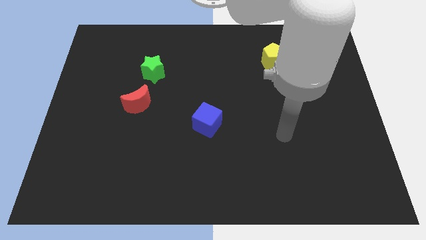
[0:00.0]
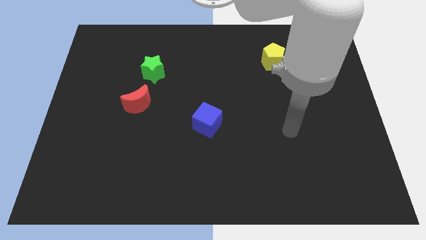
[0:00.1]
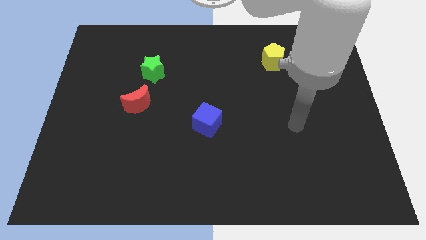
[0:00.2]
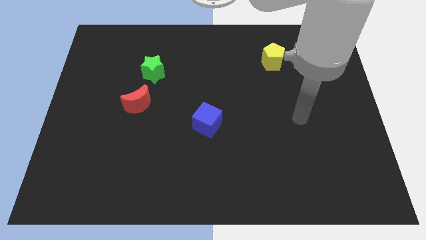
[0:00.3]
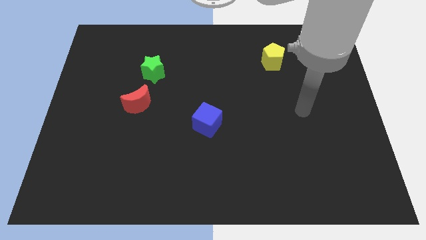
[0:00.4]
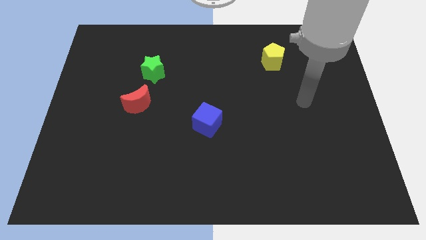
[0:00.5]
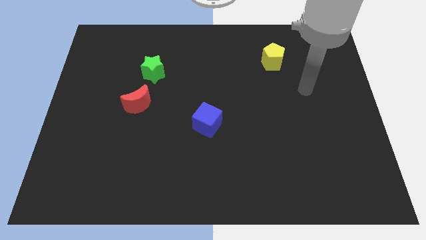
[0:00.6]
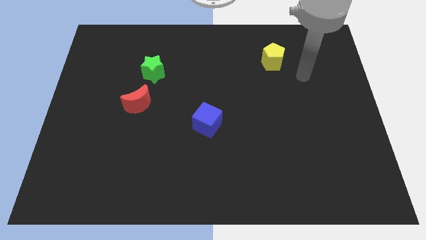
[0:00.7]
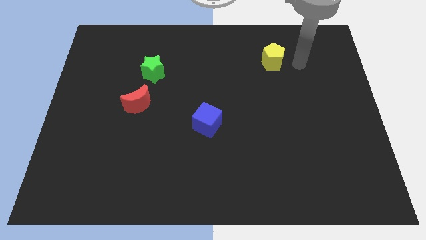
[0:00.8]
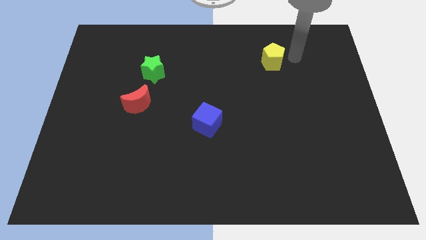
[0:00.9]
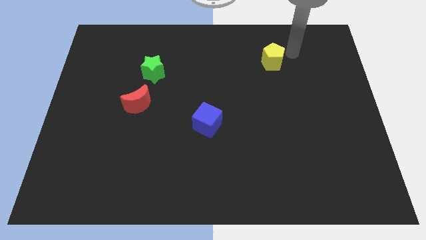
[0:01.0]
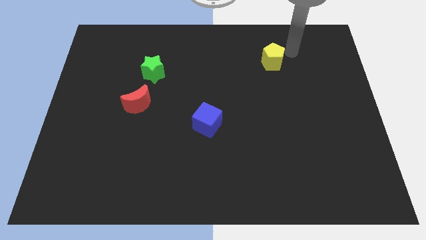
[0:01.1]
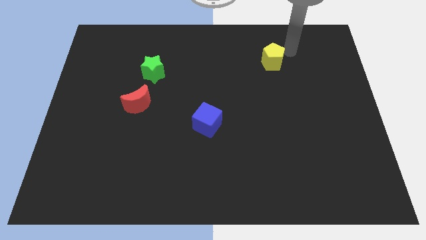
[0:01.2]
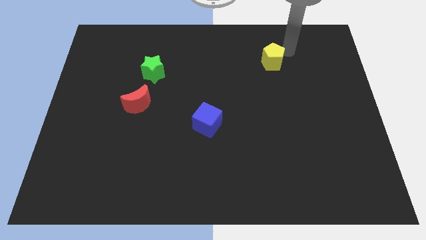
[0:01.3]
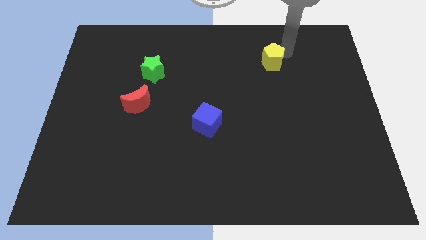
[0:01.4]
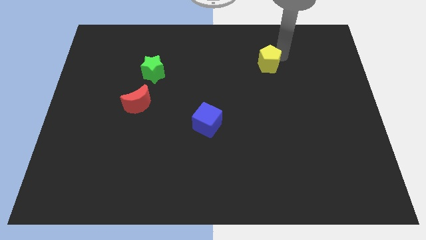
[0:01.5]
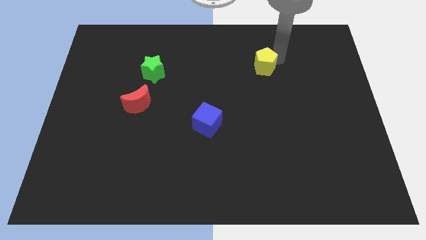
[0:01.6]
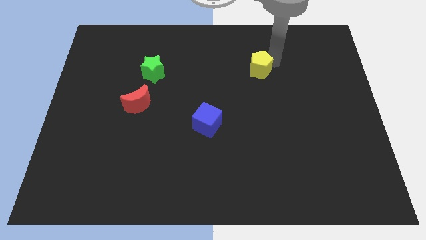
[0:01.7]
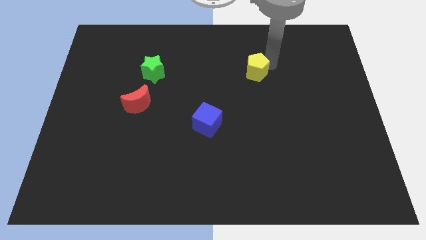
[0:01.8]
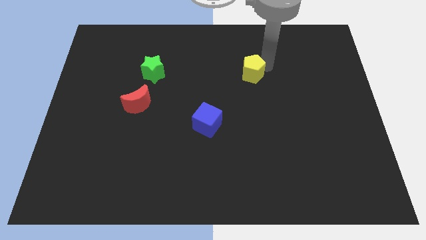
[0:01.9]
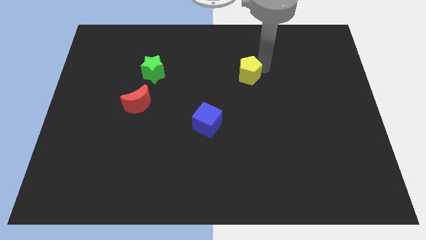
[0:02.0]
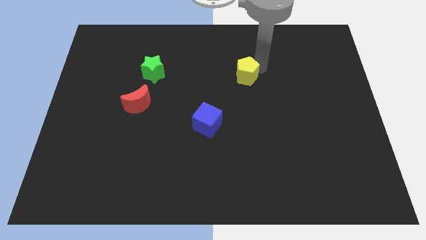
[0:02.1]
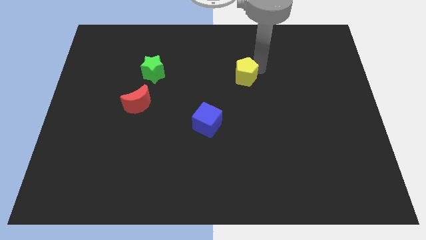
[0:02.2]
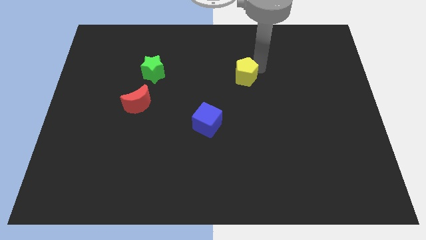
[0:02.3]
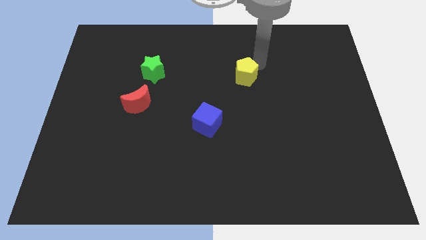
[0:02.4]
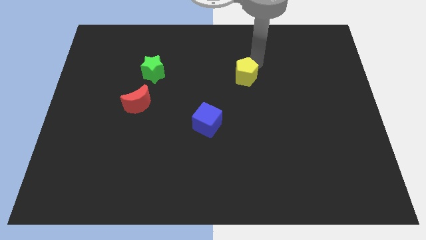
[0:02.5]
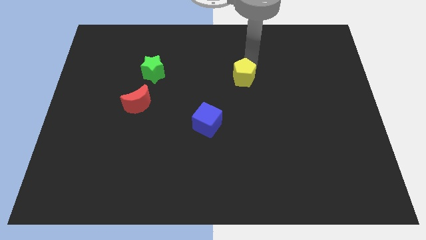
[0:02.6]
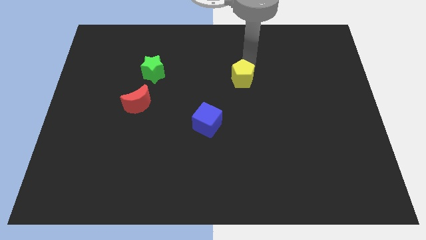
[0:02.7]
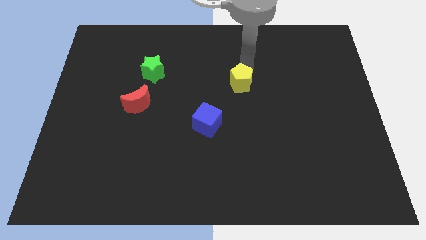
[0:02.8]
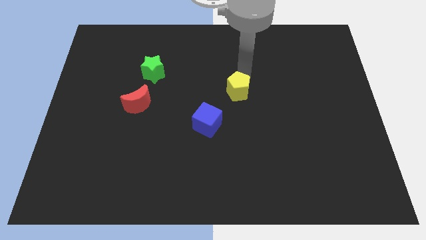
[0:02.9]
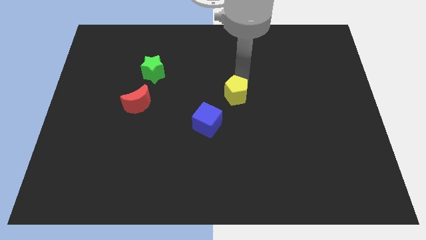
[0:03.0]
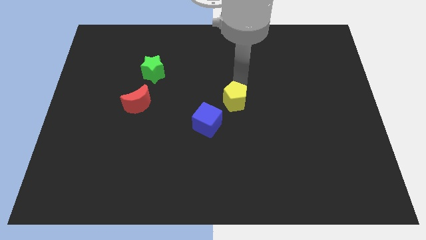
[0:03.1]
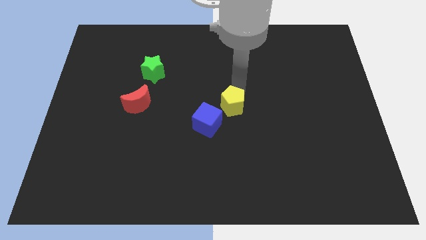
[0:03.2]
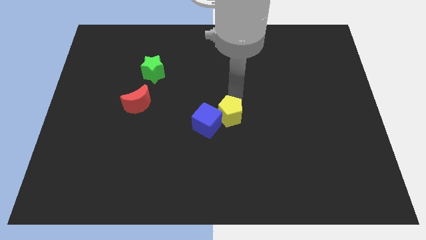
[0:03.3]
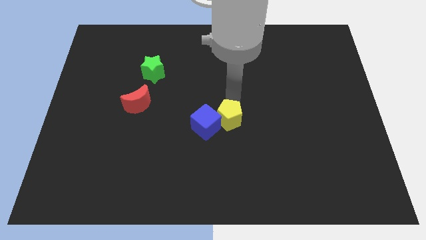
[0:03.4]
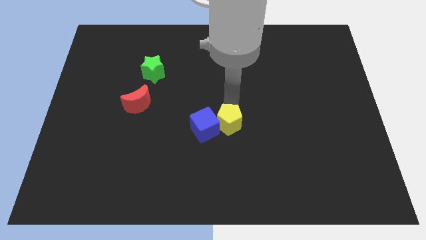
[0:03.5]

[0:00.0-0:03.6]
move the pentagon close to the blue cube

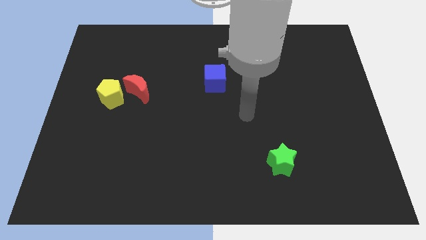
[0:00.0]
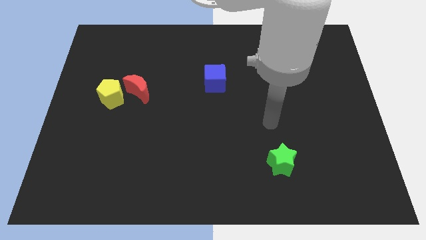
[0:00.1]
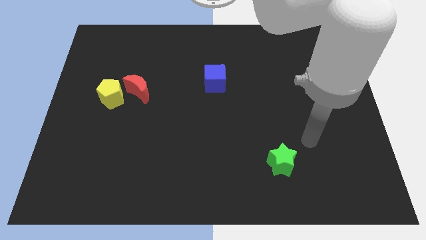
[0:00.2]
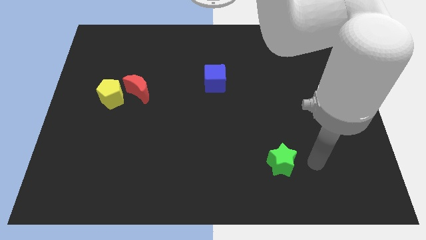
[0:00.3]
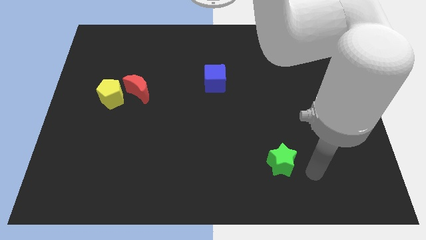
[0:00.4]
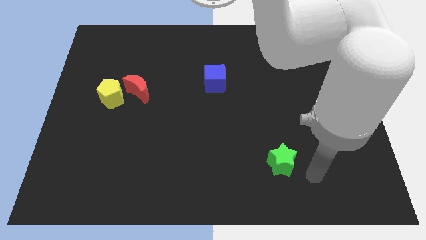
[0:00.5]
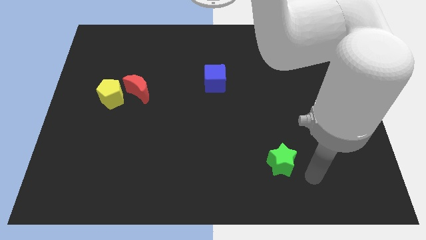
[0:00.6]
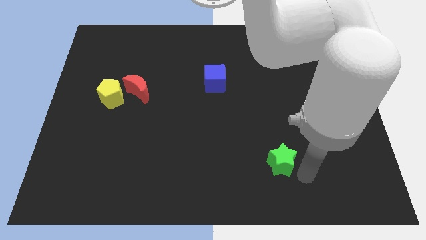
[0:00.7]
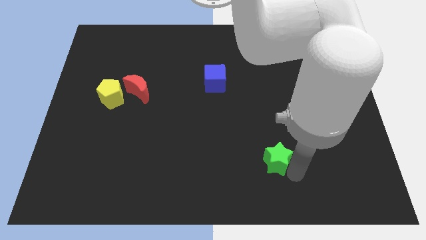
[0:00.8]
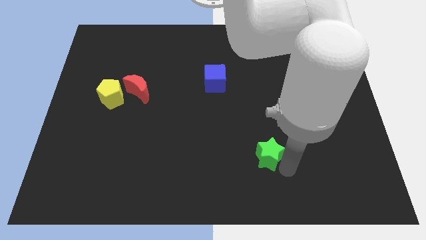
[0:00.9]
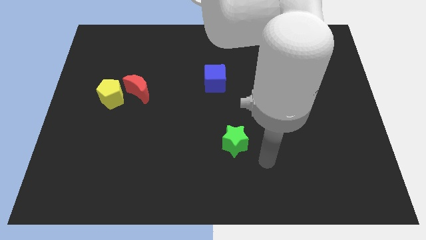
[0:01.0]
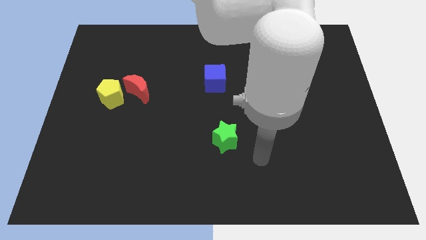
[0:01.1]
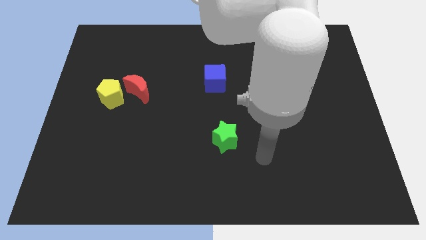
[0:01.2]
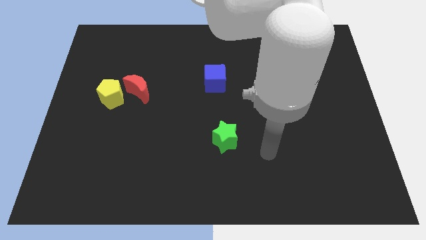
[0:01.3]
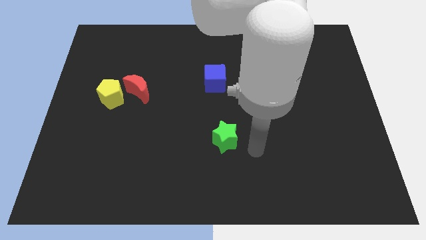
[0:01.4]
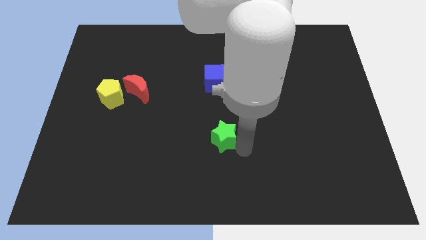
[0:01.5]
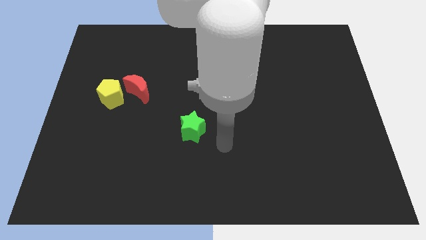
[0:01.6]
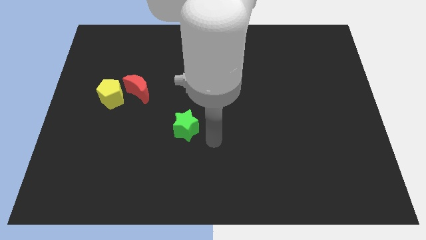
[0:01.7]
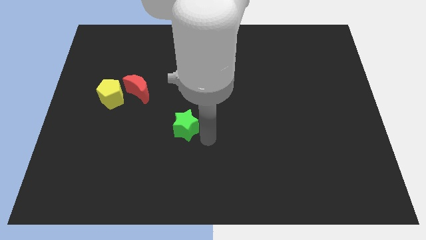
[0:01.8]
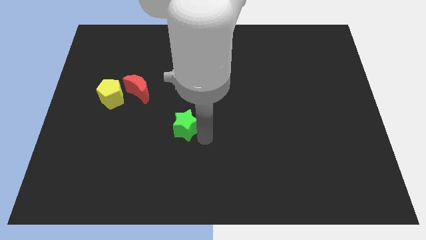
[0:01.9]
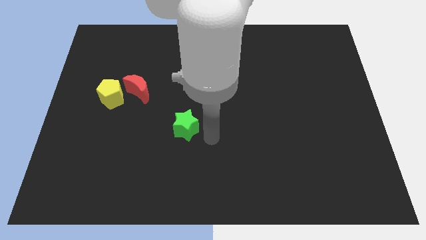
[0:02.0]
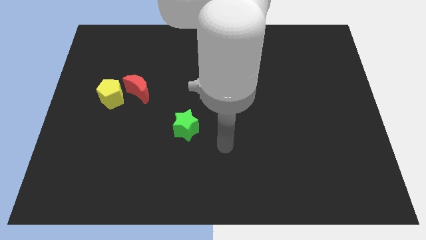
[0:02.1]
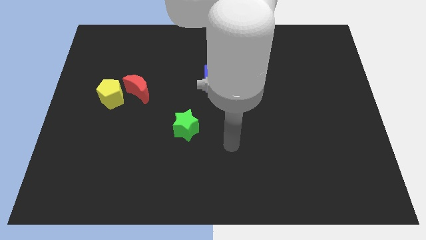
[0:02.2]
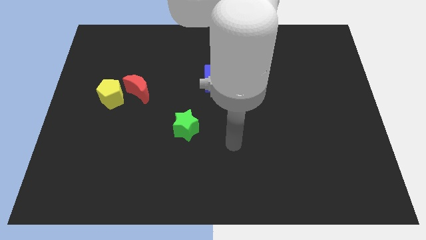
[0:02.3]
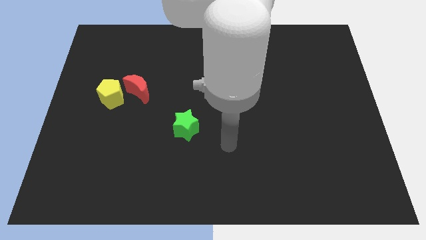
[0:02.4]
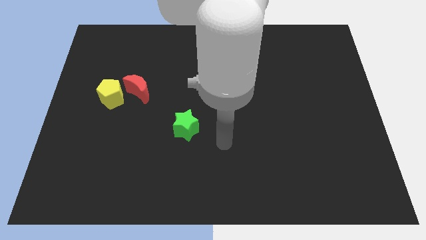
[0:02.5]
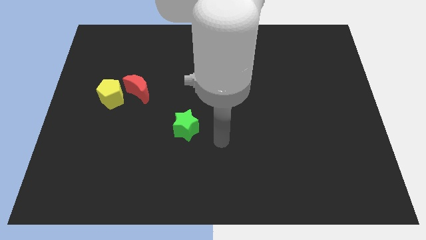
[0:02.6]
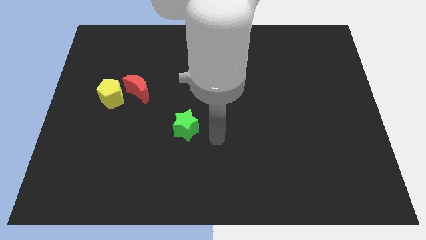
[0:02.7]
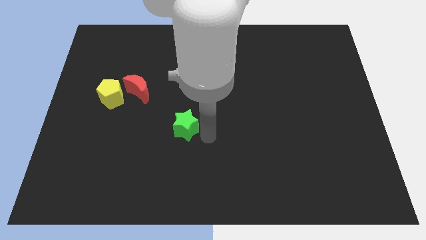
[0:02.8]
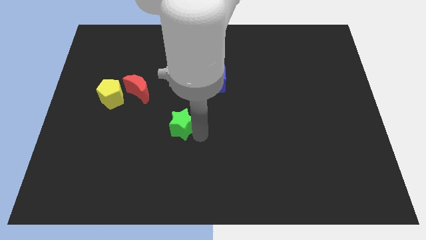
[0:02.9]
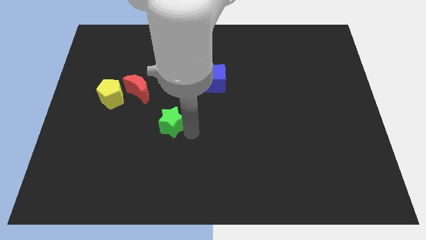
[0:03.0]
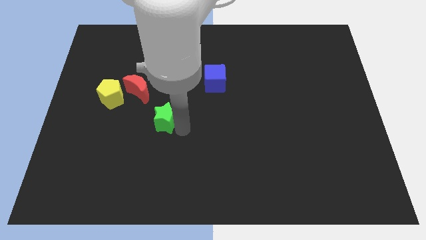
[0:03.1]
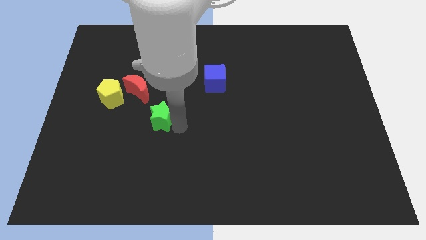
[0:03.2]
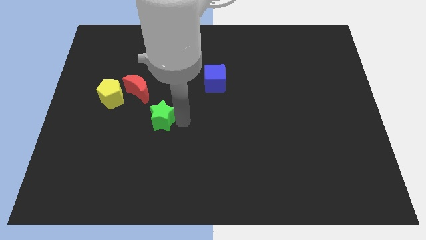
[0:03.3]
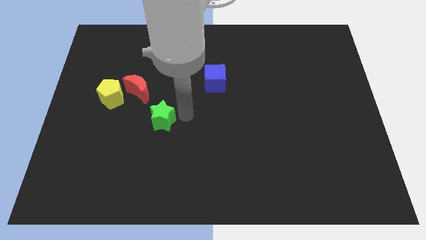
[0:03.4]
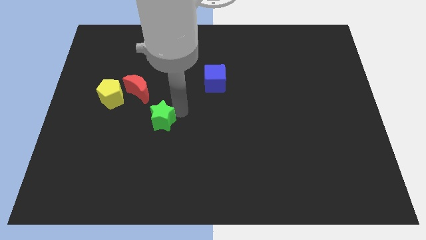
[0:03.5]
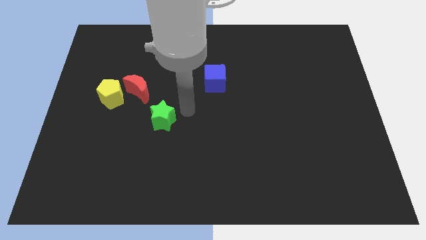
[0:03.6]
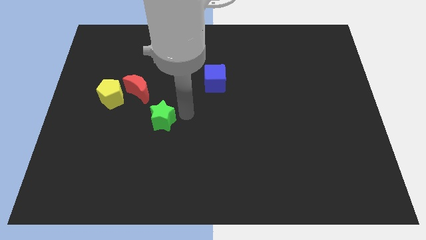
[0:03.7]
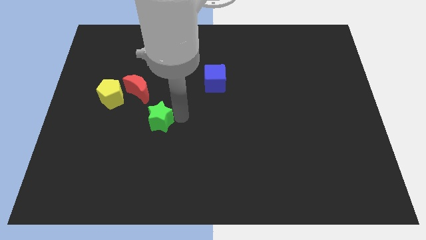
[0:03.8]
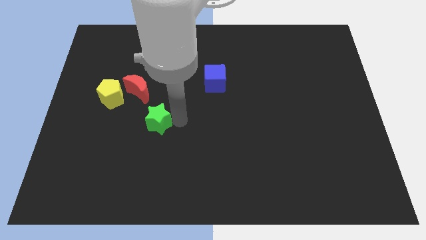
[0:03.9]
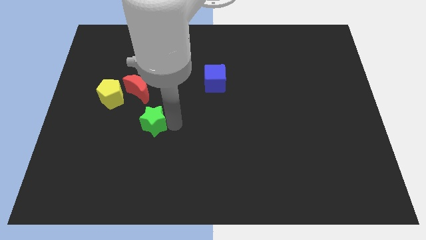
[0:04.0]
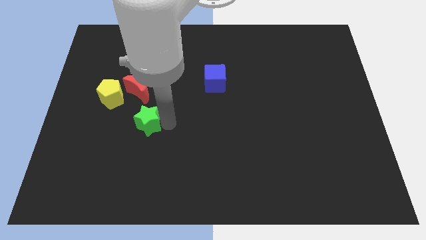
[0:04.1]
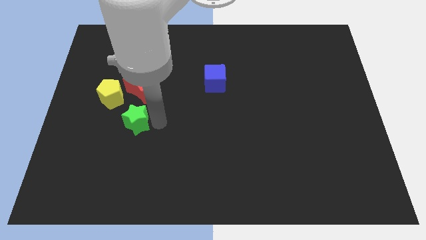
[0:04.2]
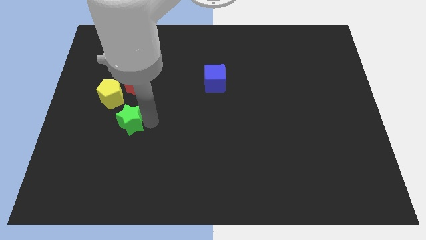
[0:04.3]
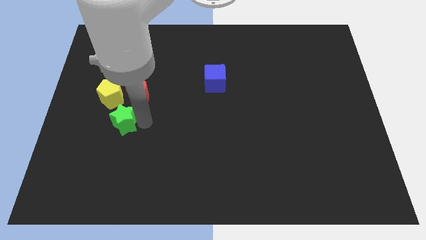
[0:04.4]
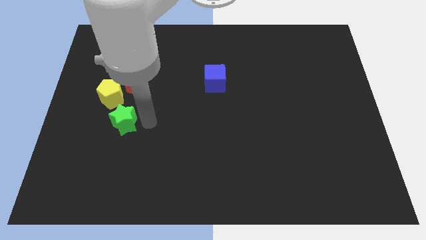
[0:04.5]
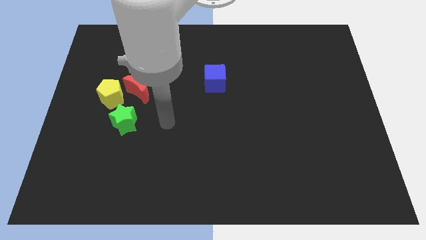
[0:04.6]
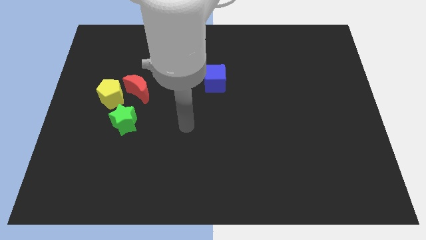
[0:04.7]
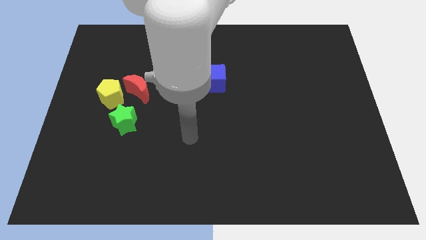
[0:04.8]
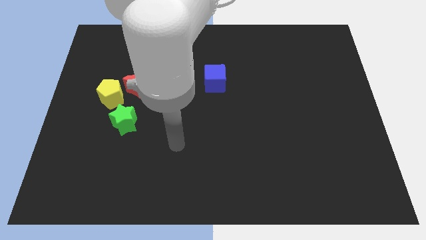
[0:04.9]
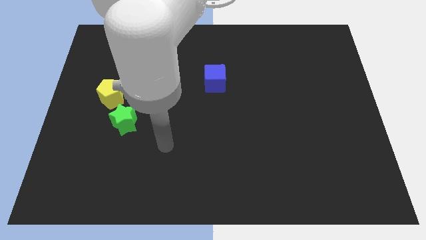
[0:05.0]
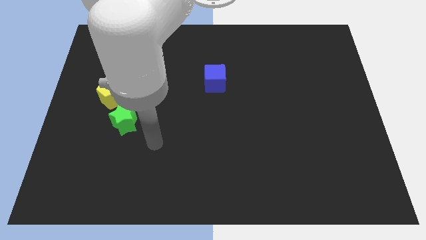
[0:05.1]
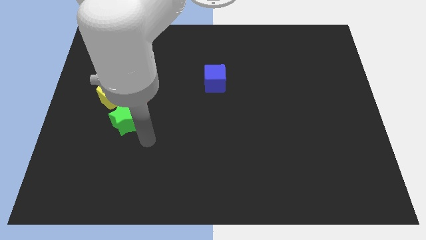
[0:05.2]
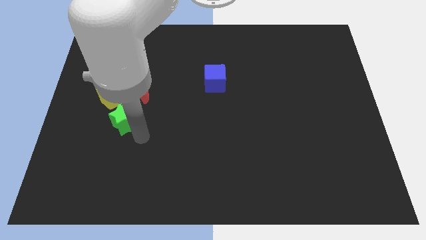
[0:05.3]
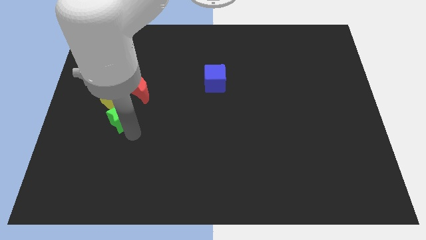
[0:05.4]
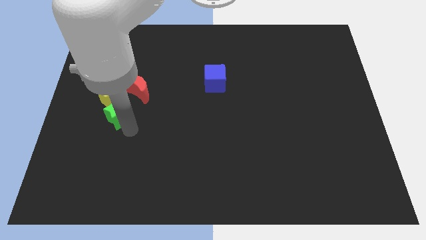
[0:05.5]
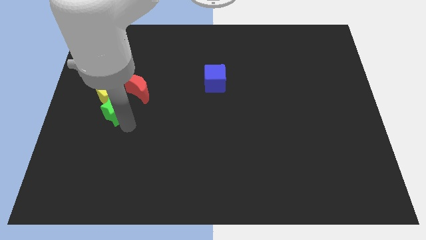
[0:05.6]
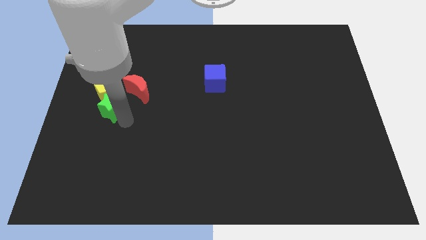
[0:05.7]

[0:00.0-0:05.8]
move the star next to the yellow block
